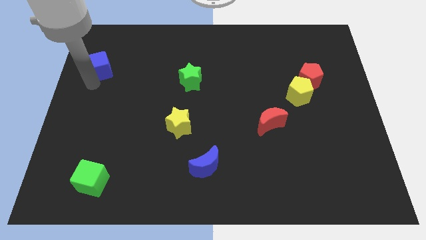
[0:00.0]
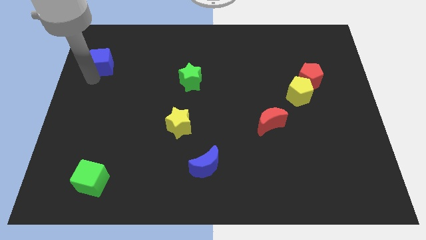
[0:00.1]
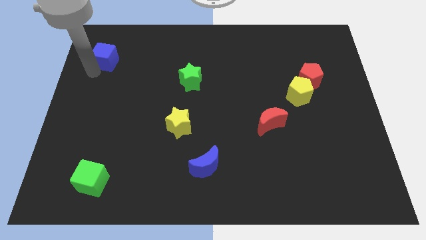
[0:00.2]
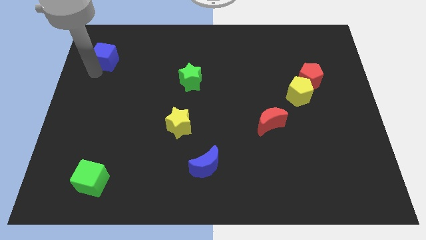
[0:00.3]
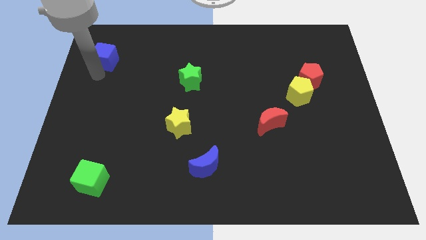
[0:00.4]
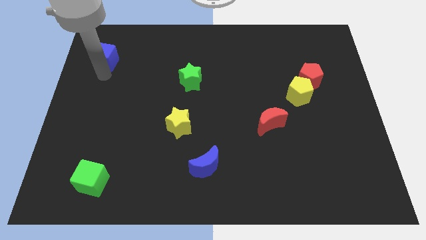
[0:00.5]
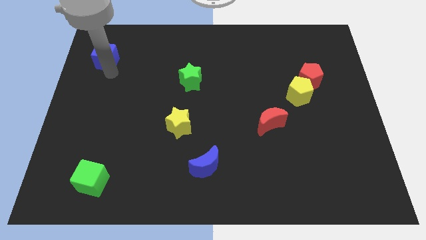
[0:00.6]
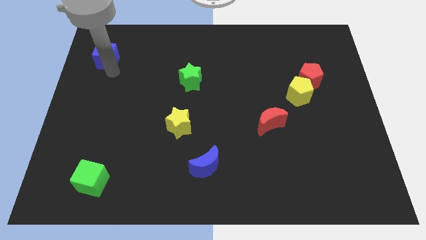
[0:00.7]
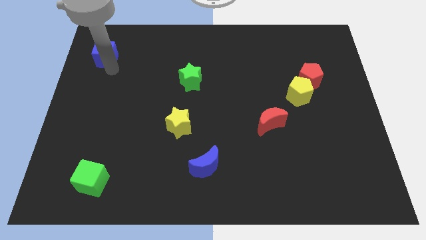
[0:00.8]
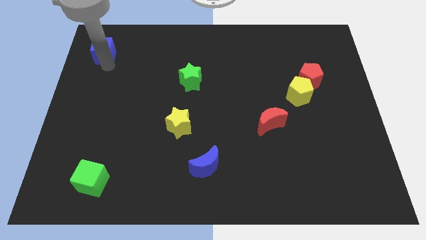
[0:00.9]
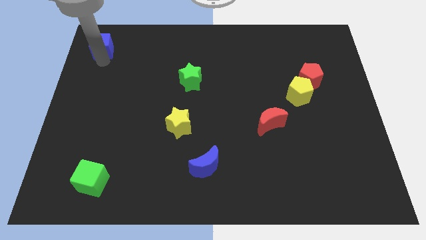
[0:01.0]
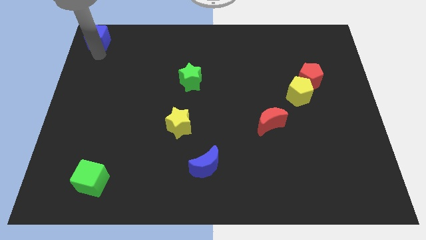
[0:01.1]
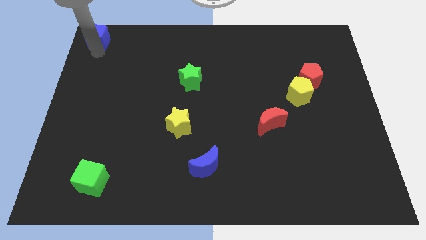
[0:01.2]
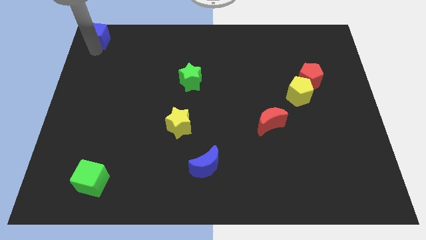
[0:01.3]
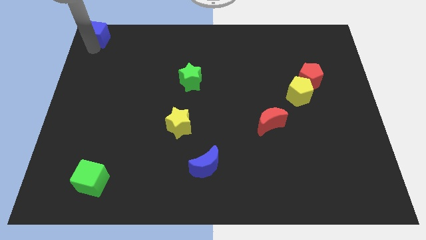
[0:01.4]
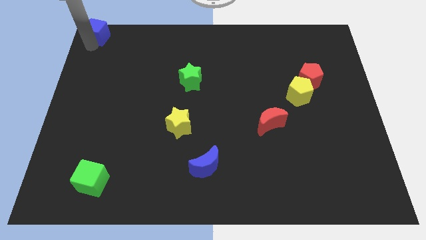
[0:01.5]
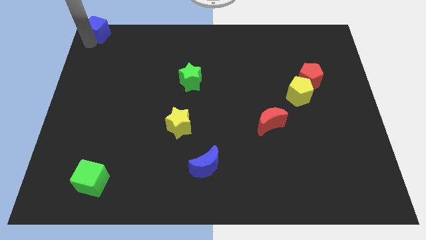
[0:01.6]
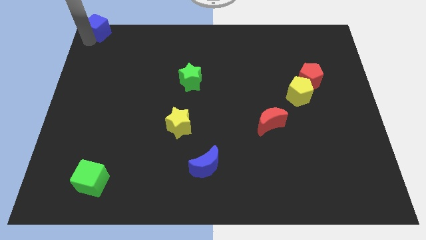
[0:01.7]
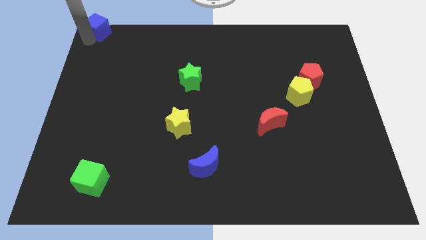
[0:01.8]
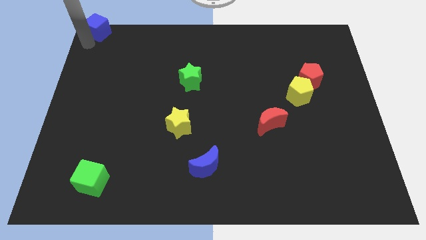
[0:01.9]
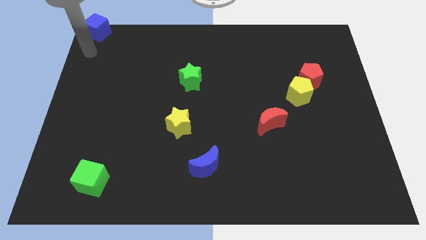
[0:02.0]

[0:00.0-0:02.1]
place the blue cube at the top left corner of the board

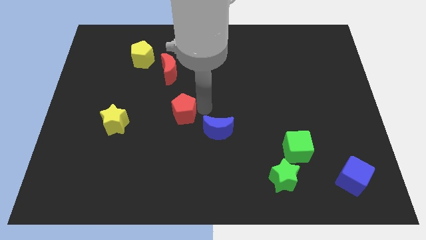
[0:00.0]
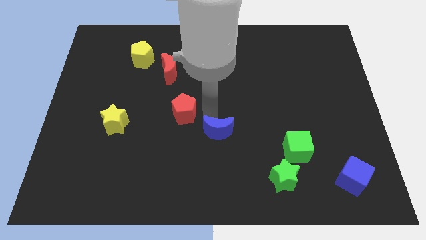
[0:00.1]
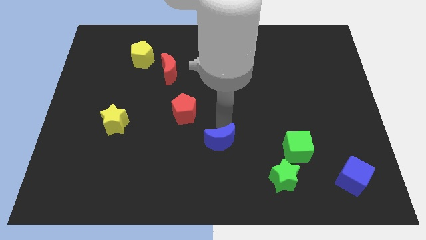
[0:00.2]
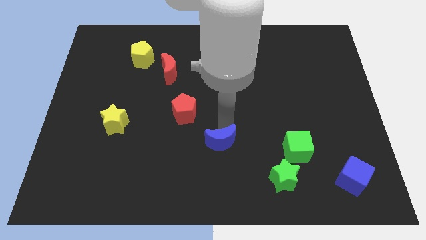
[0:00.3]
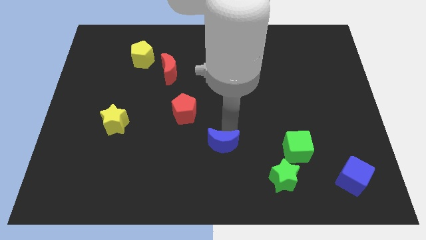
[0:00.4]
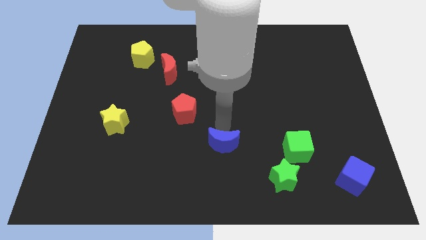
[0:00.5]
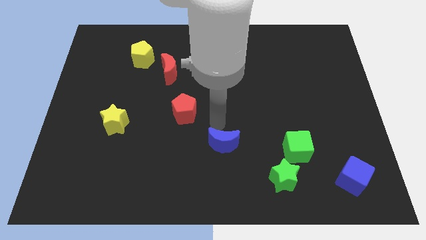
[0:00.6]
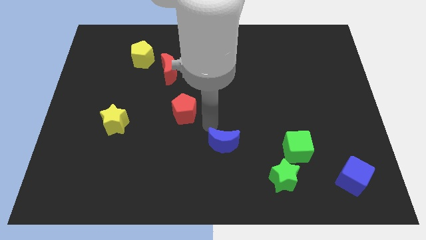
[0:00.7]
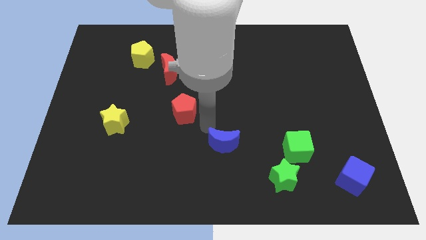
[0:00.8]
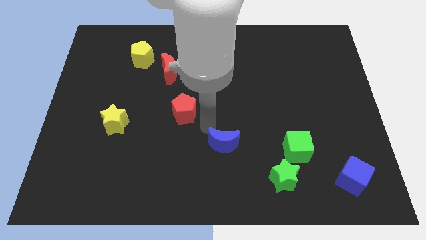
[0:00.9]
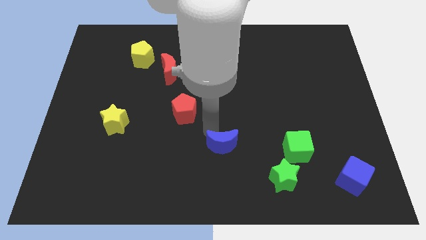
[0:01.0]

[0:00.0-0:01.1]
push the blue crescent downwards

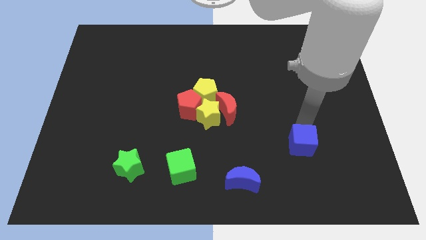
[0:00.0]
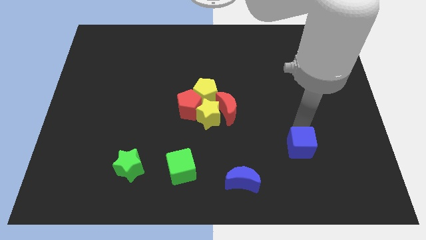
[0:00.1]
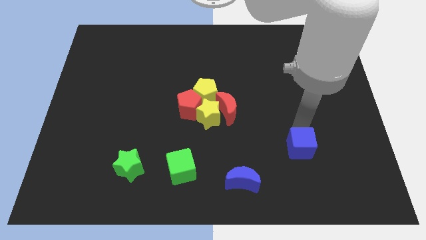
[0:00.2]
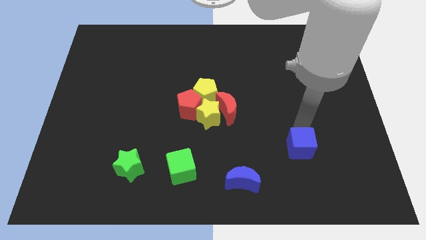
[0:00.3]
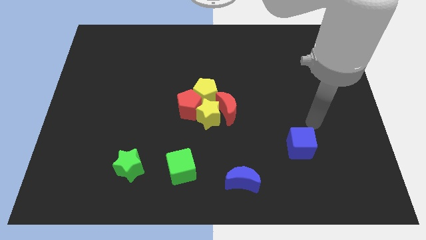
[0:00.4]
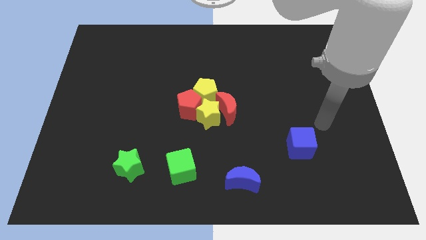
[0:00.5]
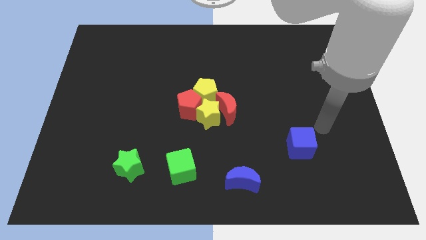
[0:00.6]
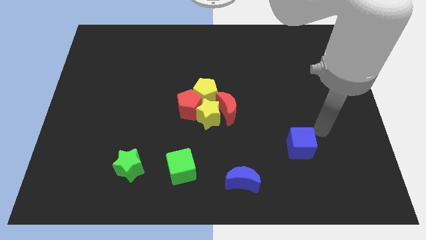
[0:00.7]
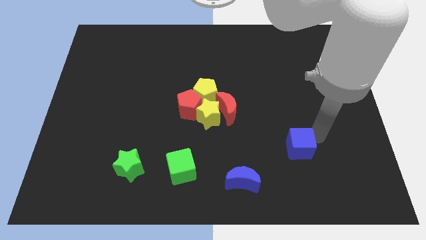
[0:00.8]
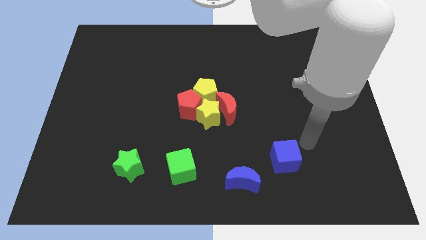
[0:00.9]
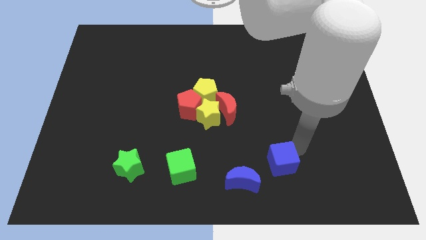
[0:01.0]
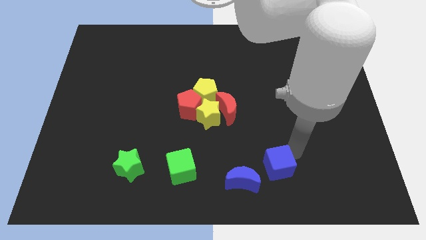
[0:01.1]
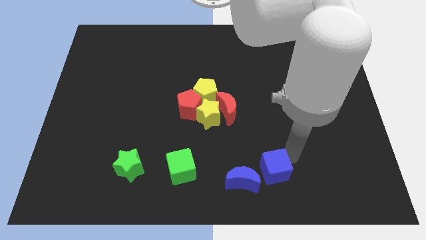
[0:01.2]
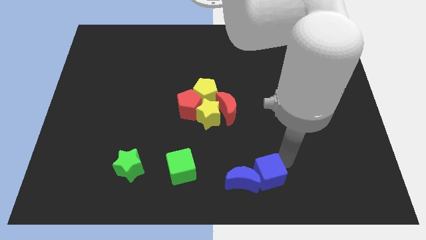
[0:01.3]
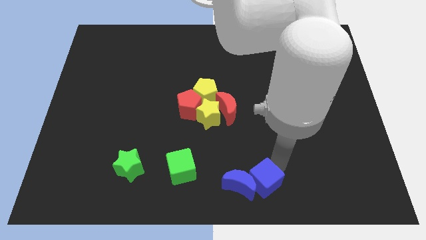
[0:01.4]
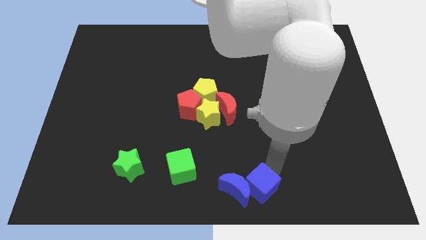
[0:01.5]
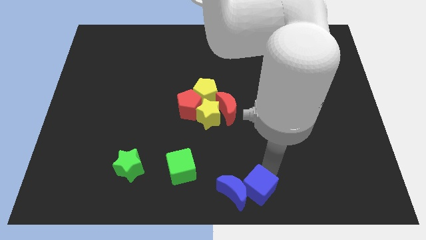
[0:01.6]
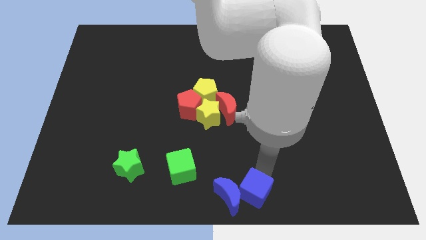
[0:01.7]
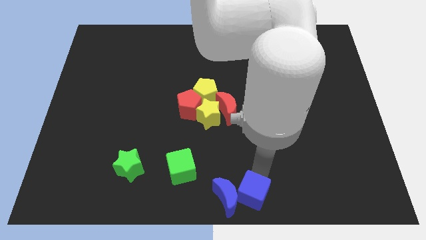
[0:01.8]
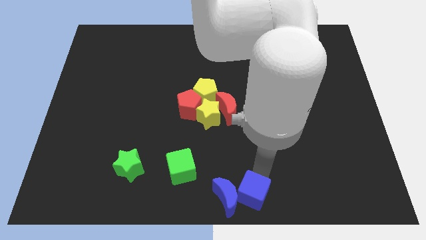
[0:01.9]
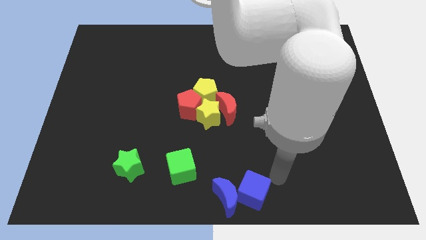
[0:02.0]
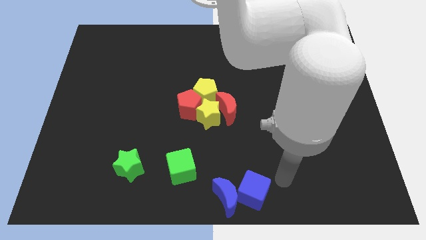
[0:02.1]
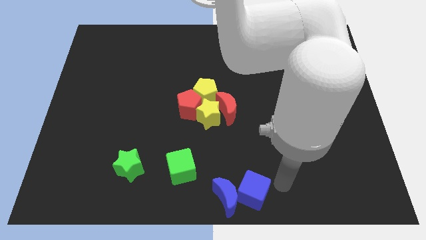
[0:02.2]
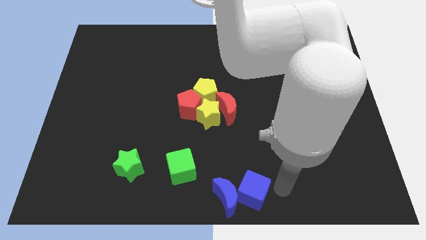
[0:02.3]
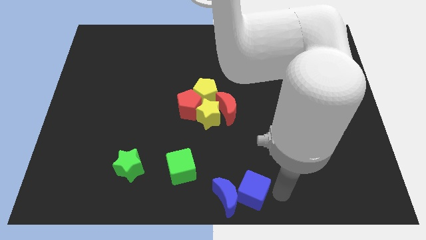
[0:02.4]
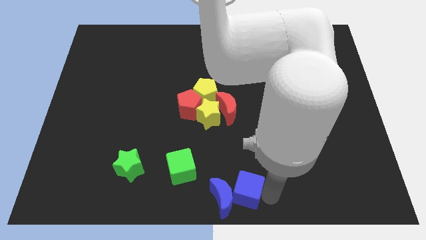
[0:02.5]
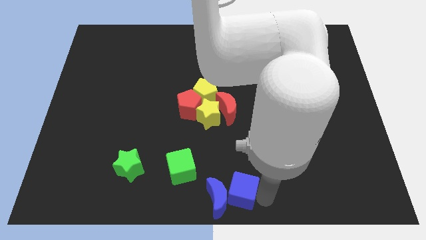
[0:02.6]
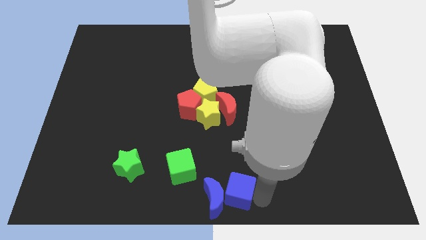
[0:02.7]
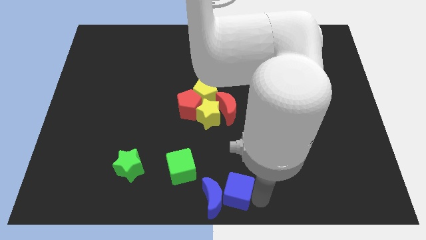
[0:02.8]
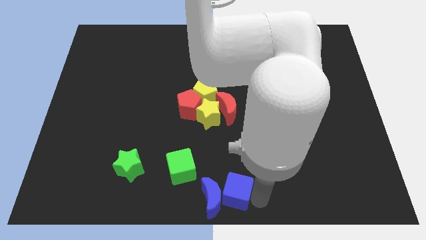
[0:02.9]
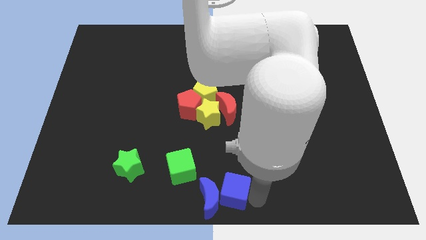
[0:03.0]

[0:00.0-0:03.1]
place the blue blocks on the bottom center of the board

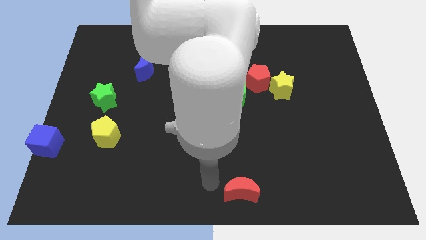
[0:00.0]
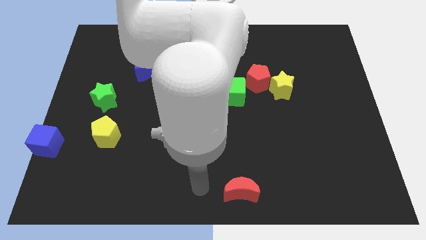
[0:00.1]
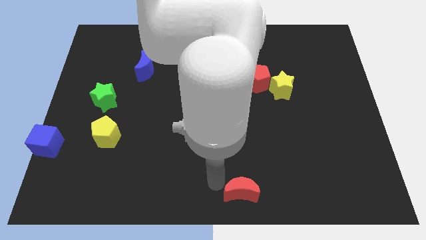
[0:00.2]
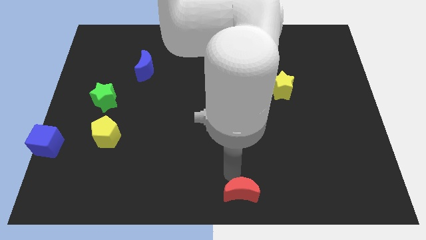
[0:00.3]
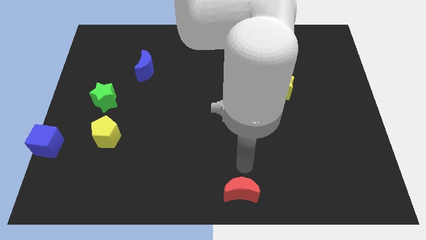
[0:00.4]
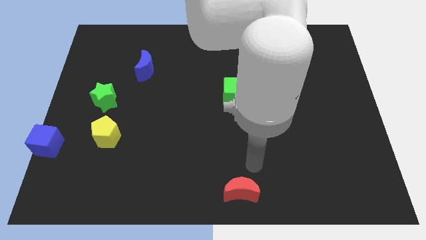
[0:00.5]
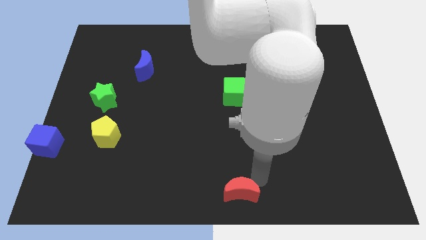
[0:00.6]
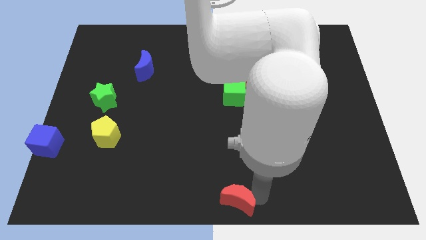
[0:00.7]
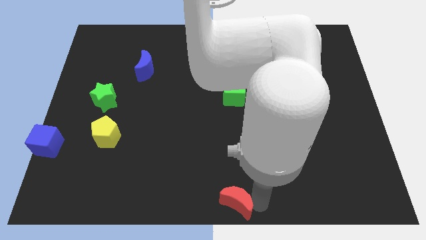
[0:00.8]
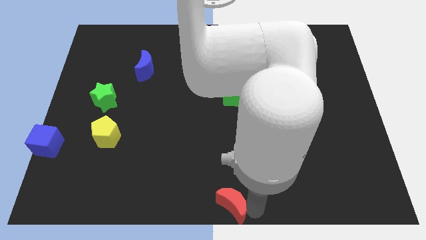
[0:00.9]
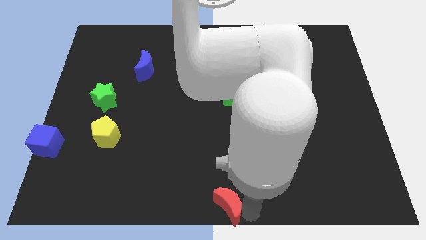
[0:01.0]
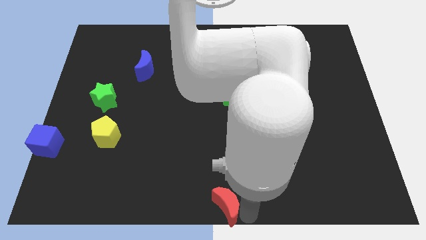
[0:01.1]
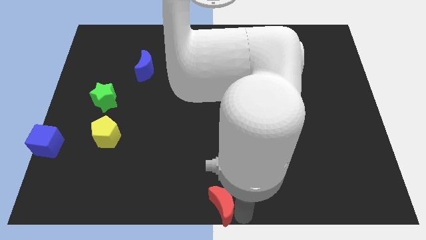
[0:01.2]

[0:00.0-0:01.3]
move the red moon at the bottom center

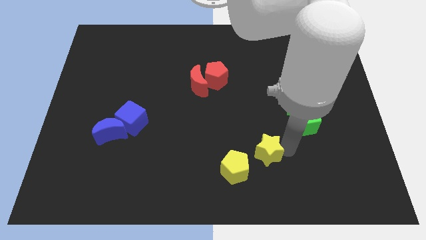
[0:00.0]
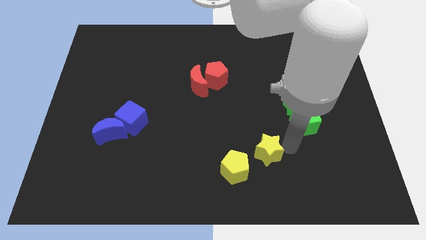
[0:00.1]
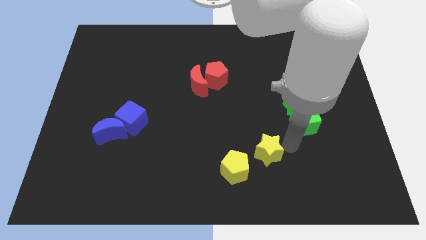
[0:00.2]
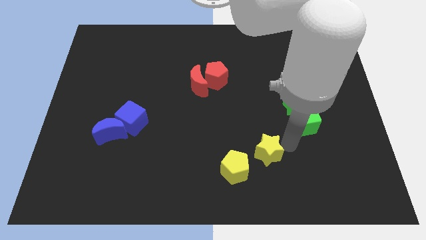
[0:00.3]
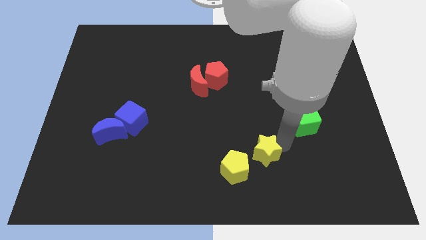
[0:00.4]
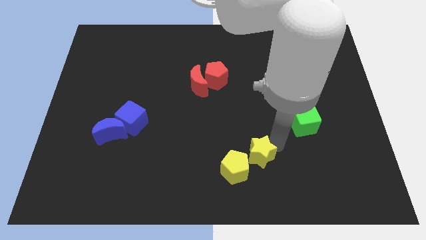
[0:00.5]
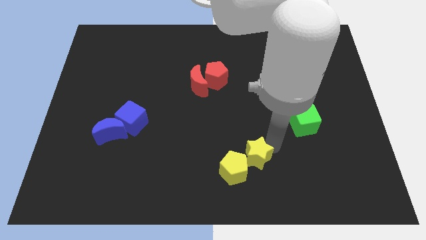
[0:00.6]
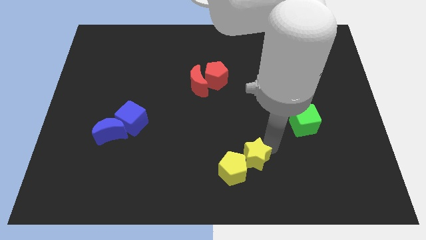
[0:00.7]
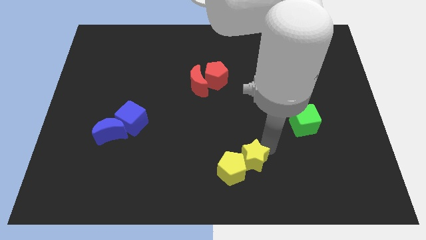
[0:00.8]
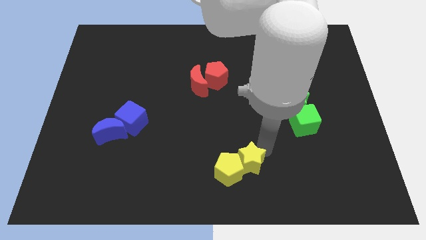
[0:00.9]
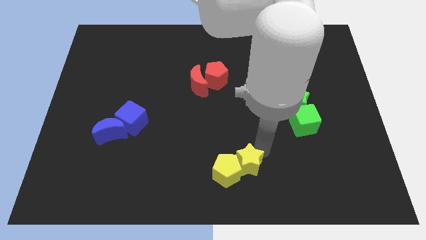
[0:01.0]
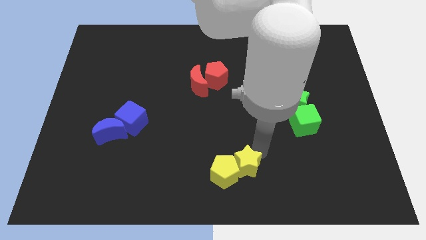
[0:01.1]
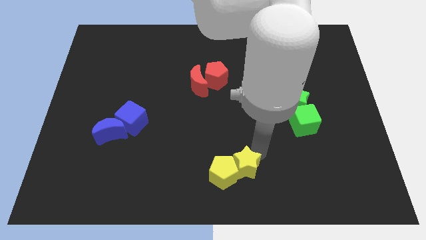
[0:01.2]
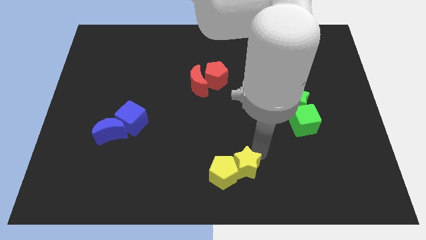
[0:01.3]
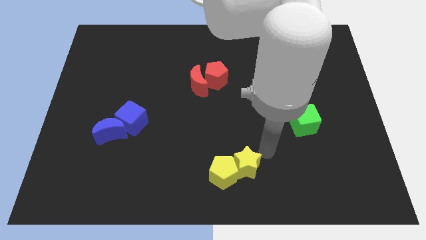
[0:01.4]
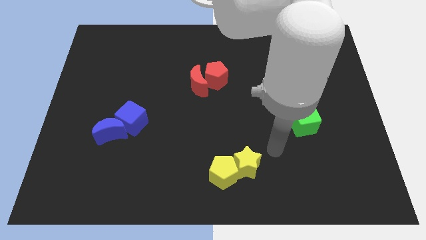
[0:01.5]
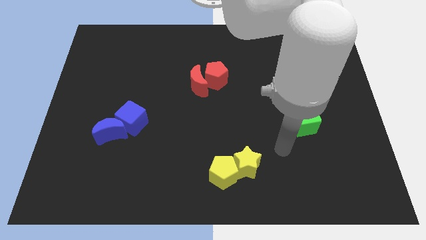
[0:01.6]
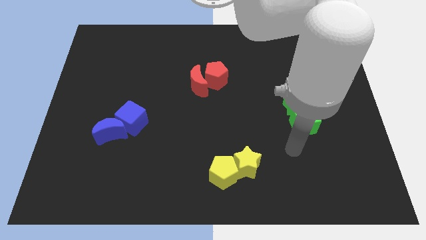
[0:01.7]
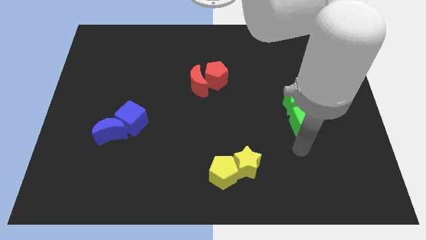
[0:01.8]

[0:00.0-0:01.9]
push the yellow pentagon and yellow star towards the bottom center of the board
